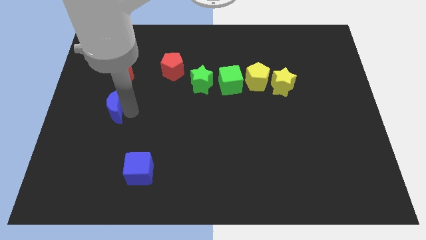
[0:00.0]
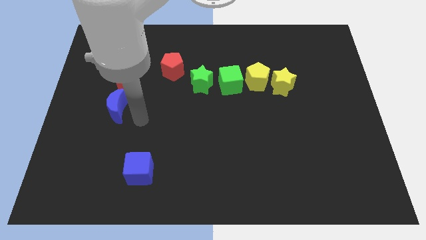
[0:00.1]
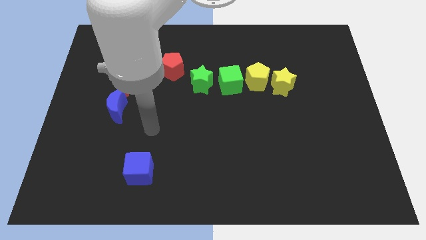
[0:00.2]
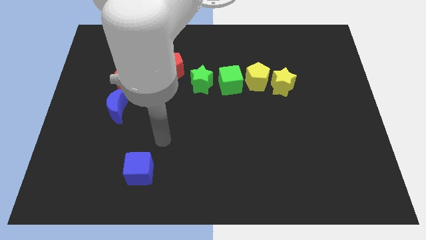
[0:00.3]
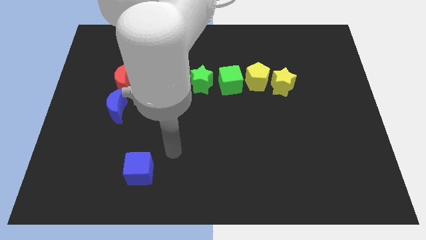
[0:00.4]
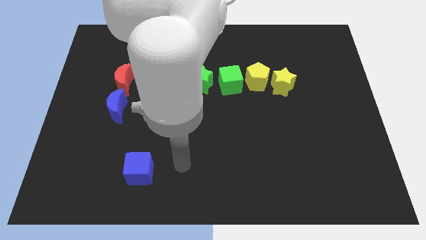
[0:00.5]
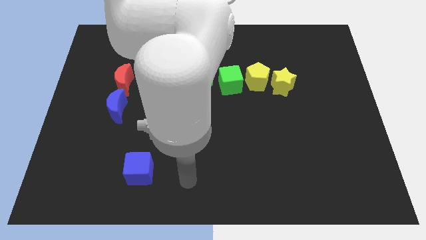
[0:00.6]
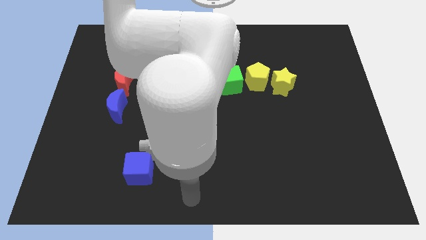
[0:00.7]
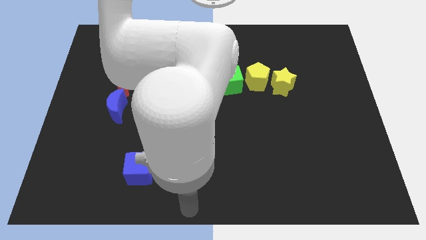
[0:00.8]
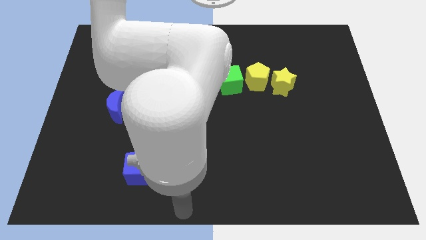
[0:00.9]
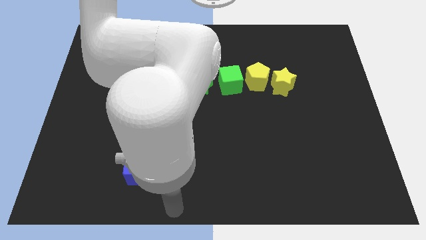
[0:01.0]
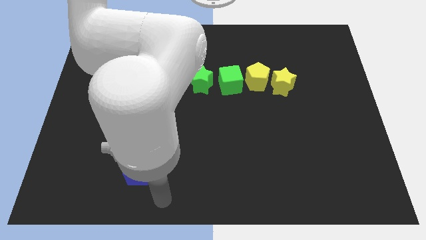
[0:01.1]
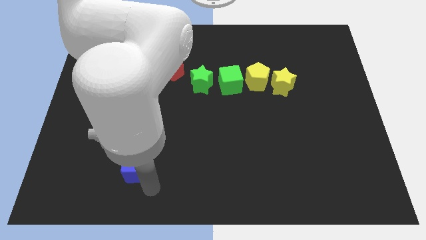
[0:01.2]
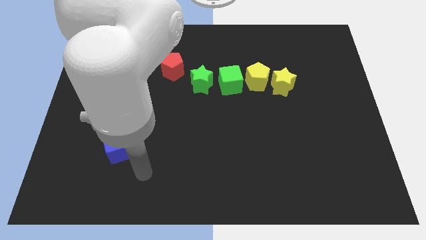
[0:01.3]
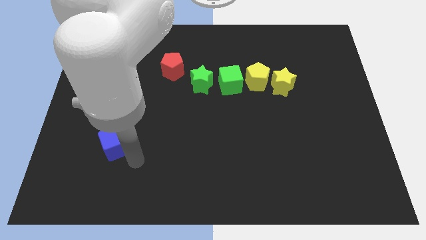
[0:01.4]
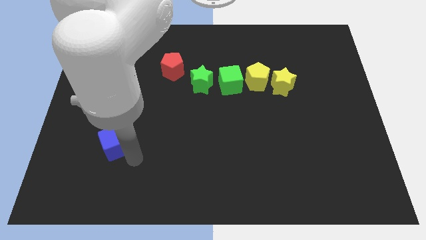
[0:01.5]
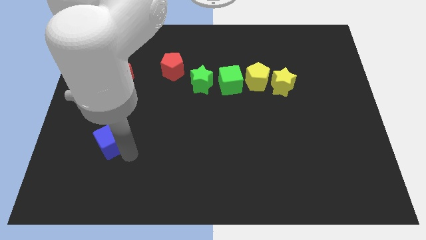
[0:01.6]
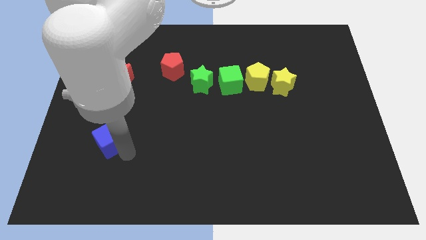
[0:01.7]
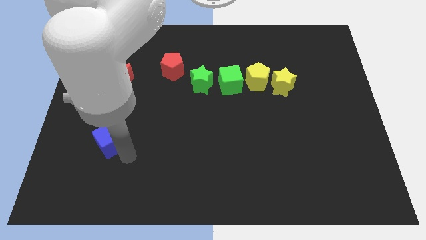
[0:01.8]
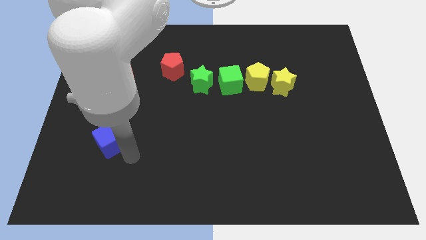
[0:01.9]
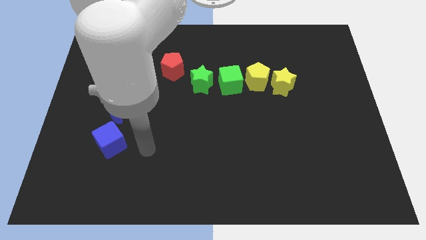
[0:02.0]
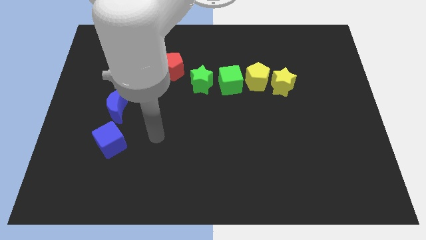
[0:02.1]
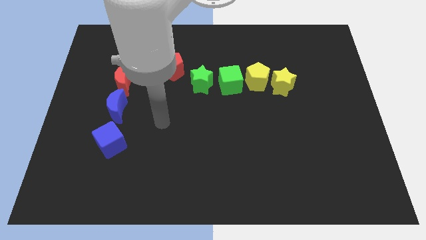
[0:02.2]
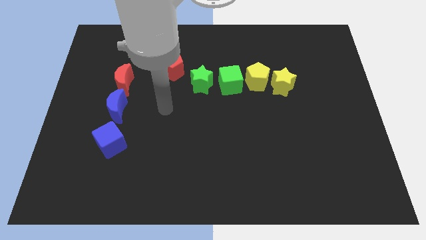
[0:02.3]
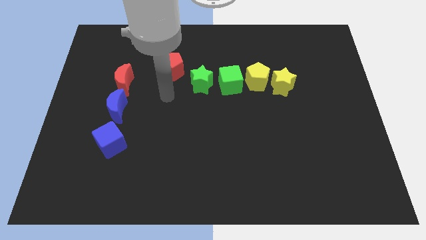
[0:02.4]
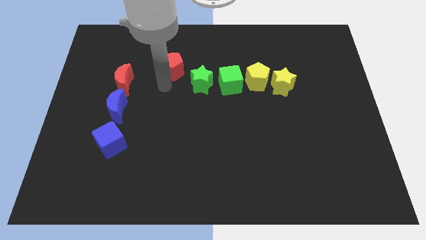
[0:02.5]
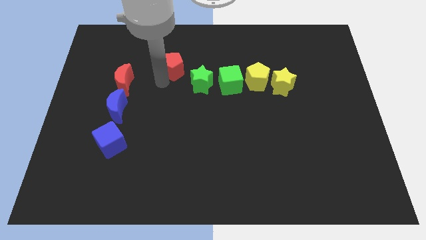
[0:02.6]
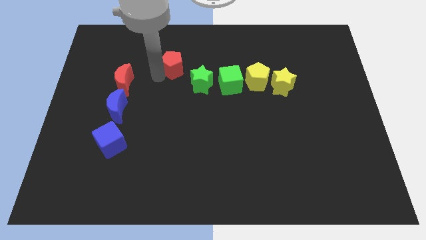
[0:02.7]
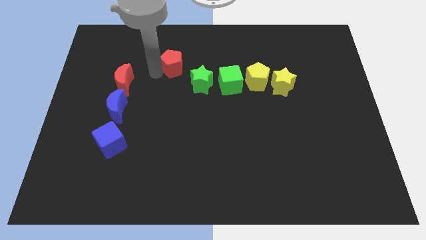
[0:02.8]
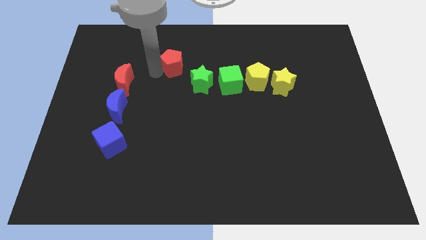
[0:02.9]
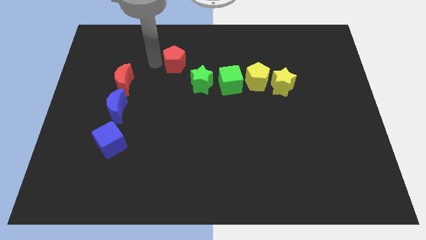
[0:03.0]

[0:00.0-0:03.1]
place the blue cube towards the bottom of the blue crescent

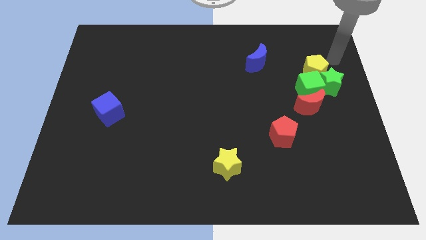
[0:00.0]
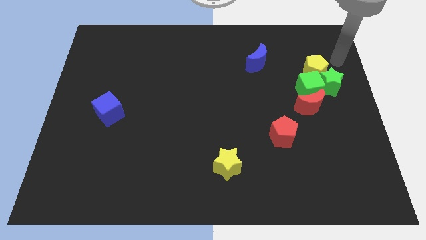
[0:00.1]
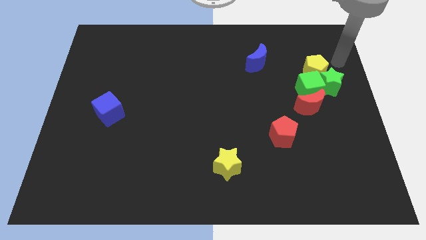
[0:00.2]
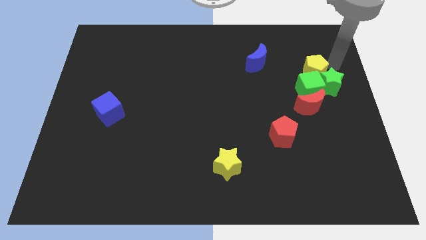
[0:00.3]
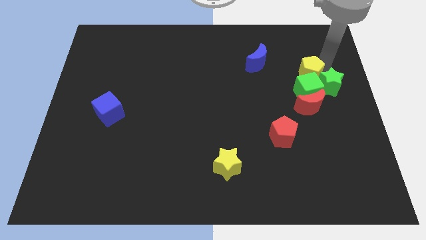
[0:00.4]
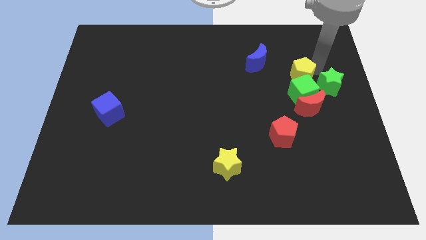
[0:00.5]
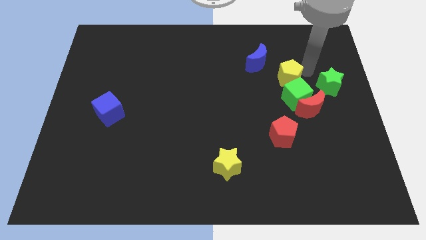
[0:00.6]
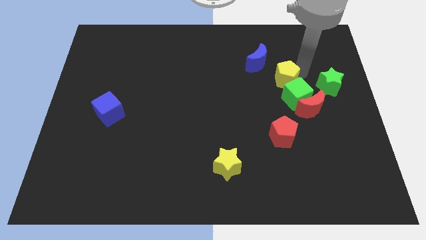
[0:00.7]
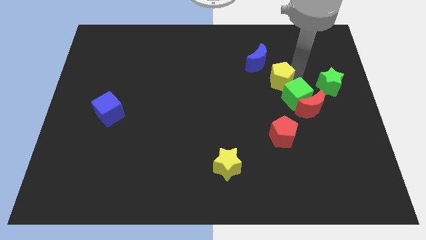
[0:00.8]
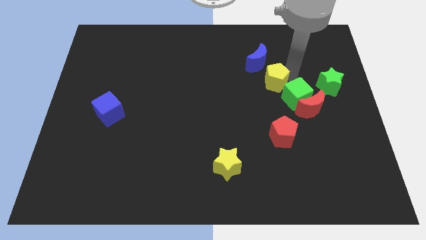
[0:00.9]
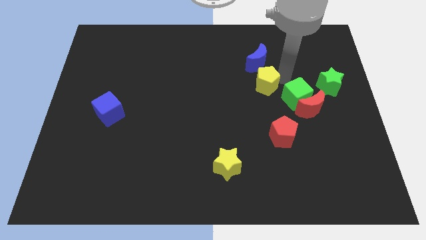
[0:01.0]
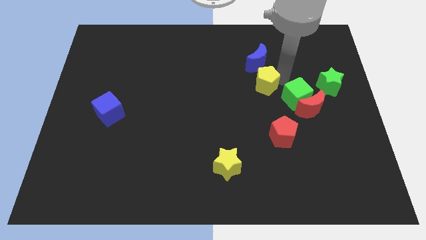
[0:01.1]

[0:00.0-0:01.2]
push the yellow pentagon into the green cube

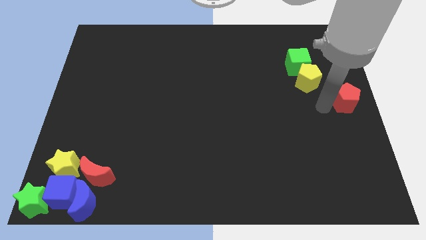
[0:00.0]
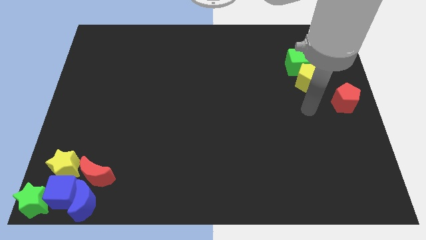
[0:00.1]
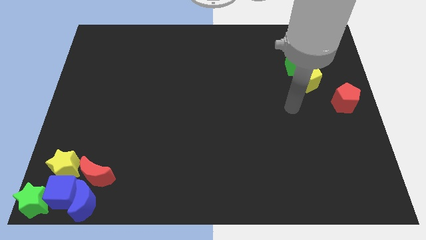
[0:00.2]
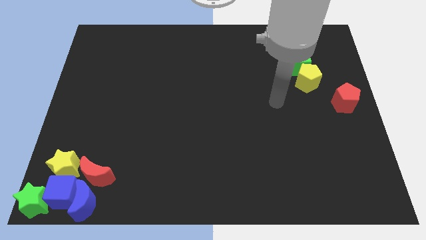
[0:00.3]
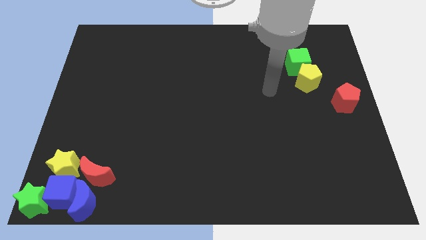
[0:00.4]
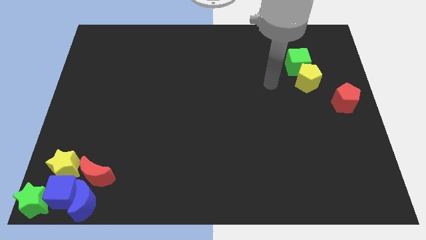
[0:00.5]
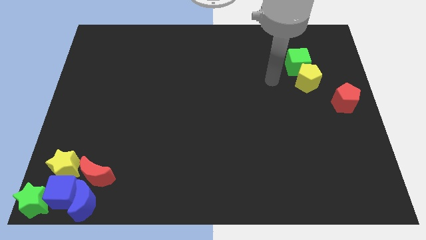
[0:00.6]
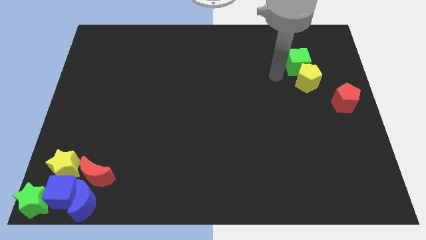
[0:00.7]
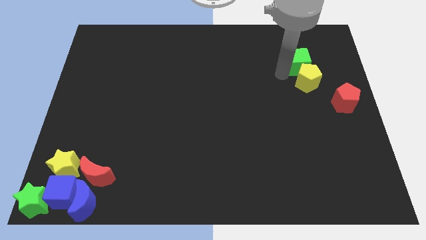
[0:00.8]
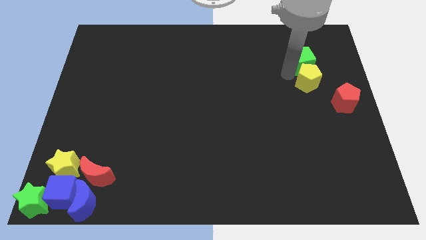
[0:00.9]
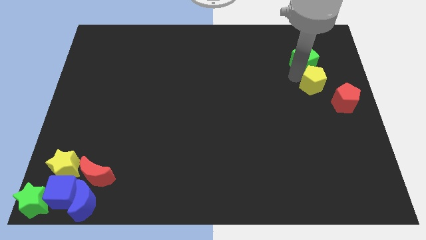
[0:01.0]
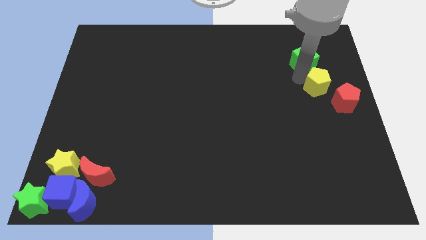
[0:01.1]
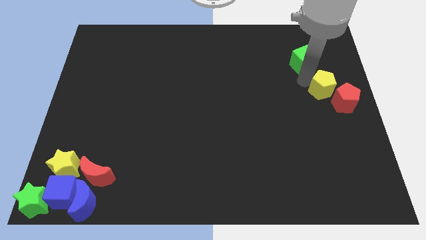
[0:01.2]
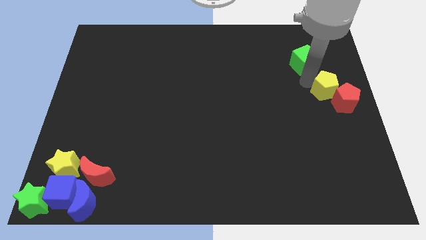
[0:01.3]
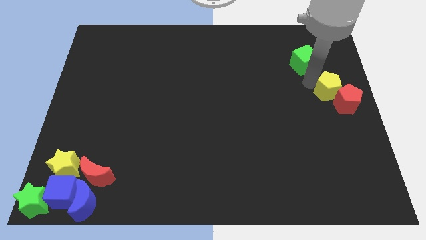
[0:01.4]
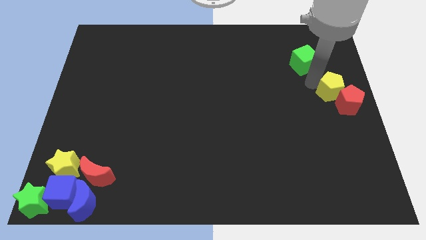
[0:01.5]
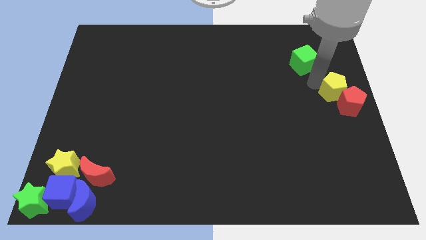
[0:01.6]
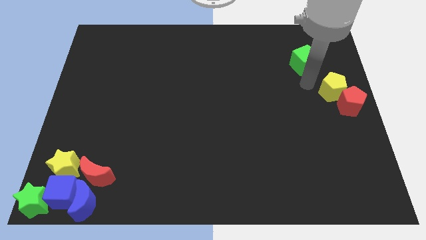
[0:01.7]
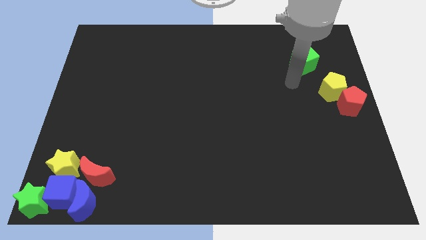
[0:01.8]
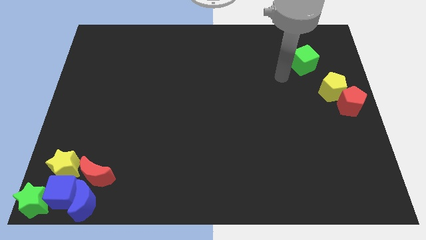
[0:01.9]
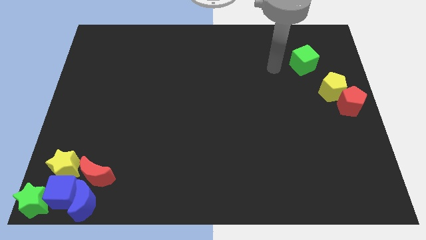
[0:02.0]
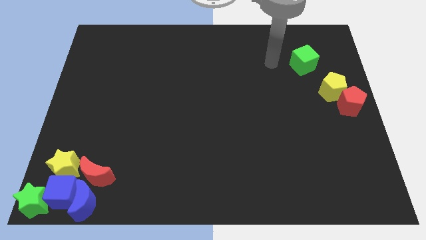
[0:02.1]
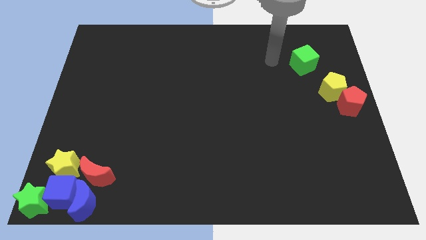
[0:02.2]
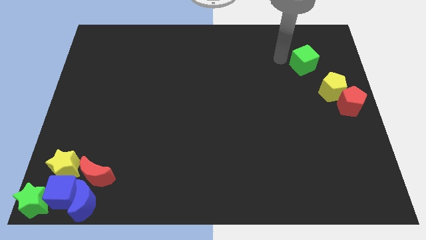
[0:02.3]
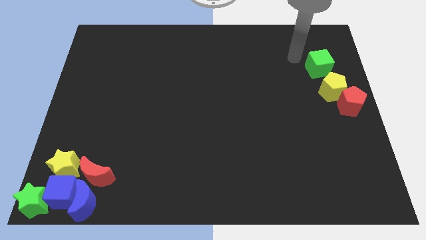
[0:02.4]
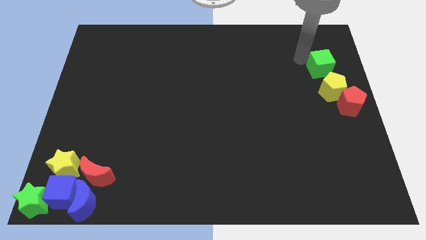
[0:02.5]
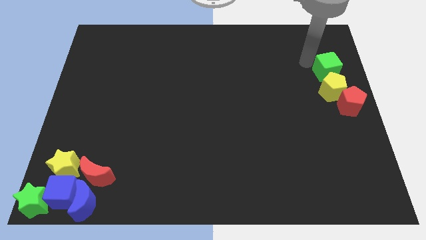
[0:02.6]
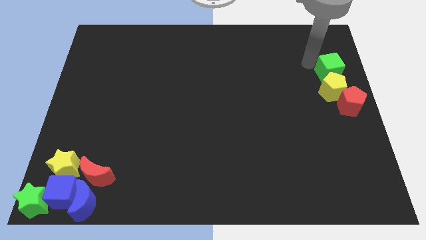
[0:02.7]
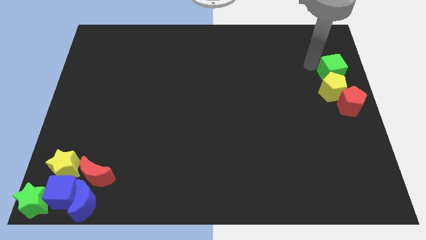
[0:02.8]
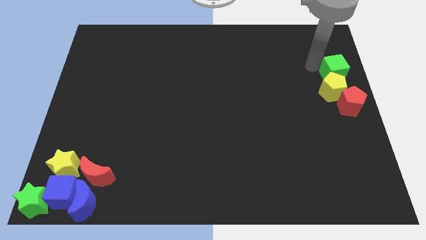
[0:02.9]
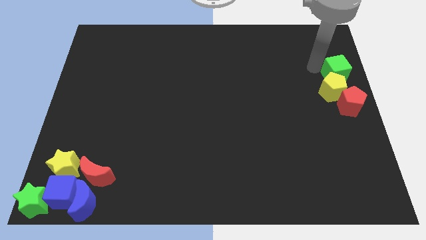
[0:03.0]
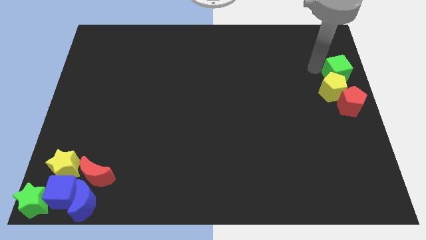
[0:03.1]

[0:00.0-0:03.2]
line the green cube and yellow pentagon blocks up vertically just above the red pentagon

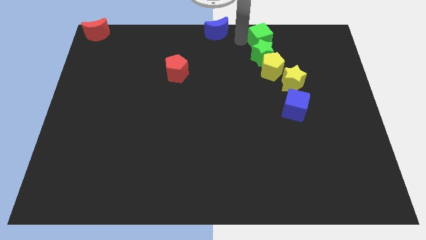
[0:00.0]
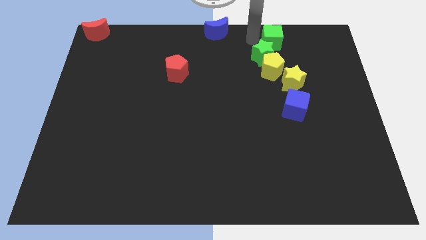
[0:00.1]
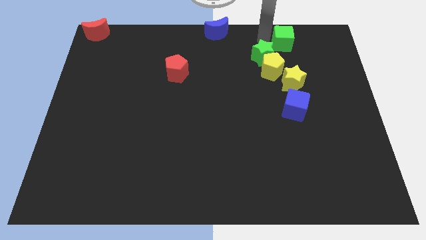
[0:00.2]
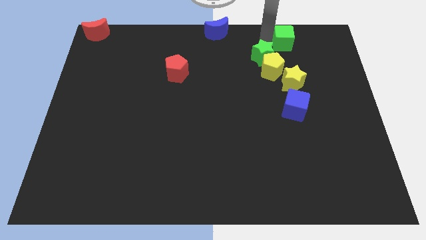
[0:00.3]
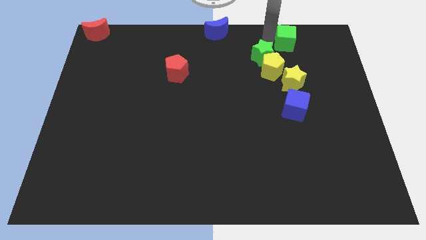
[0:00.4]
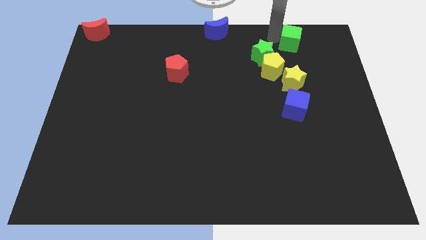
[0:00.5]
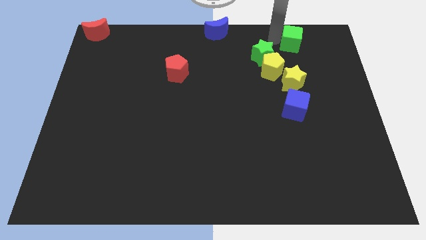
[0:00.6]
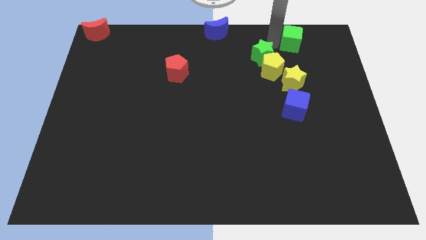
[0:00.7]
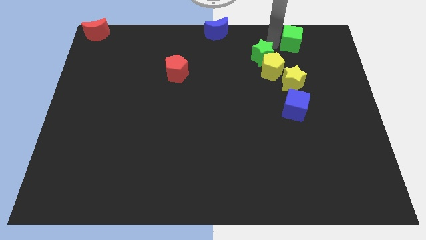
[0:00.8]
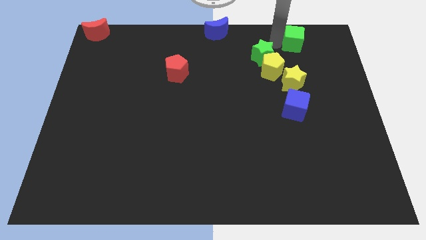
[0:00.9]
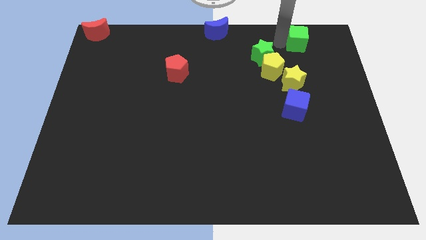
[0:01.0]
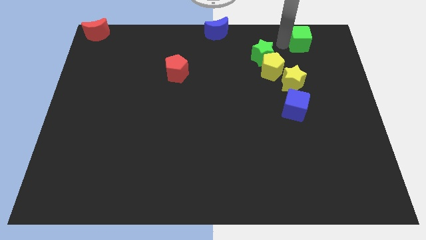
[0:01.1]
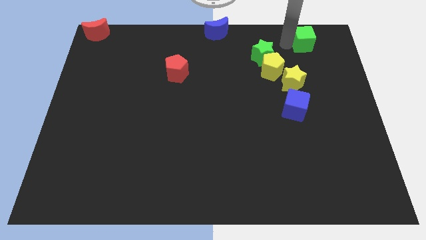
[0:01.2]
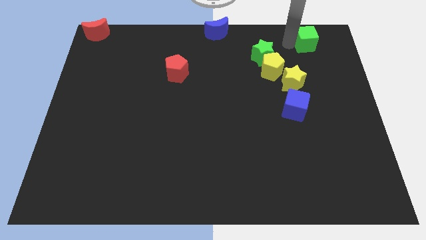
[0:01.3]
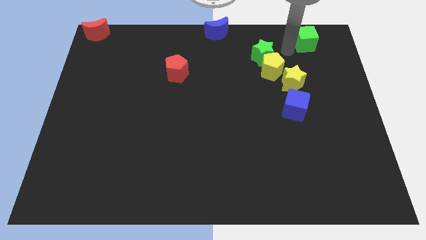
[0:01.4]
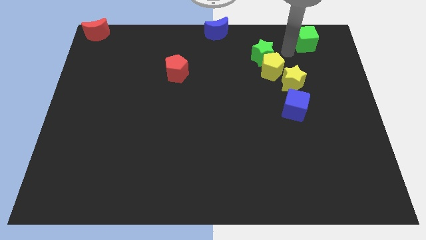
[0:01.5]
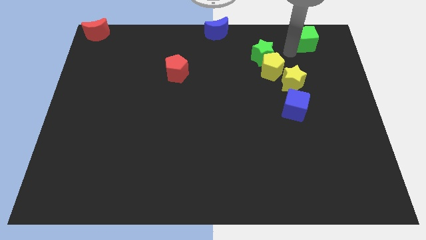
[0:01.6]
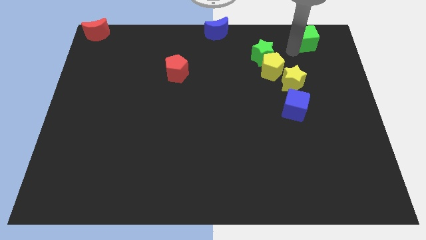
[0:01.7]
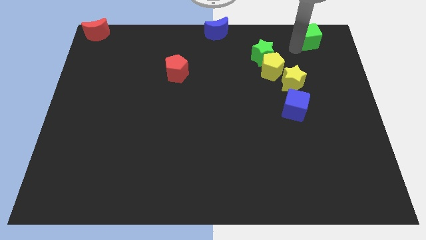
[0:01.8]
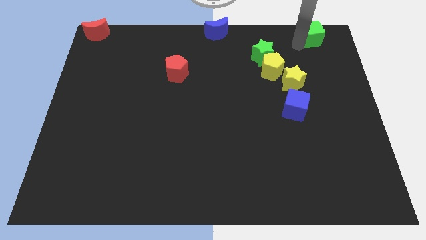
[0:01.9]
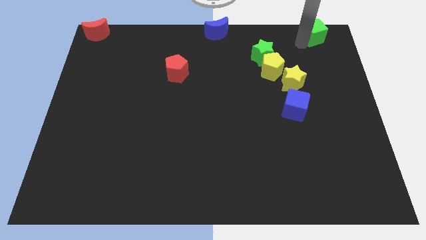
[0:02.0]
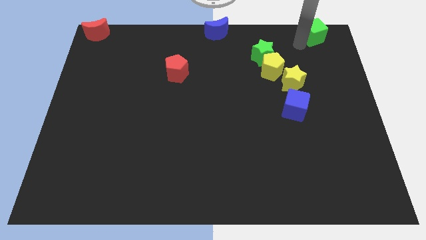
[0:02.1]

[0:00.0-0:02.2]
move the green cube away from the top side of the green star
